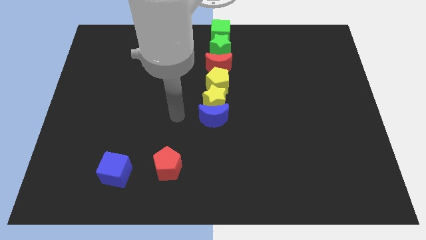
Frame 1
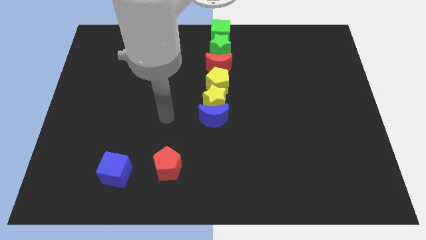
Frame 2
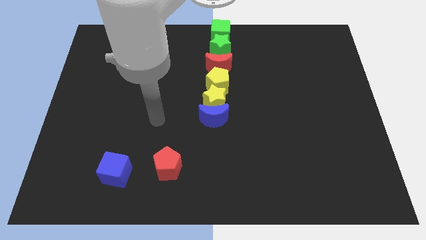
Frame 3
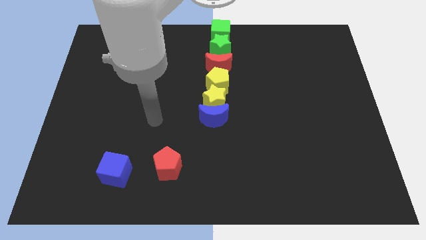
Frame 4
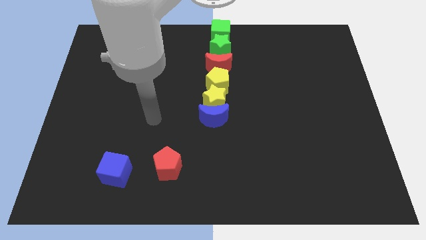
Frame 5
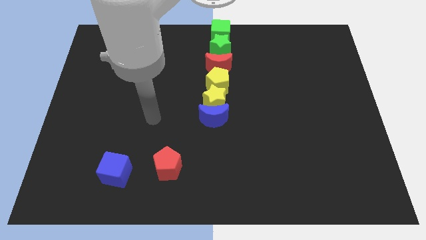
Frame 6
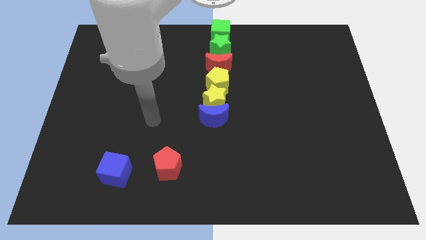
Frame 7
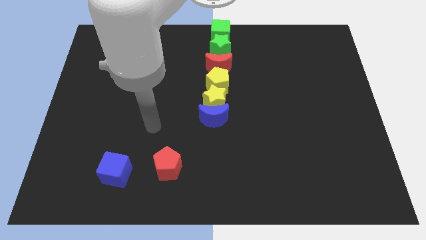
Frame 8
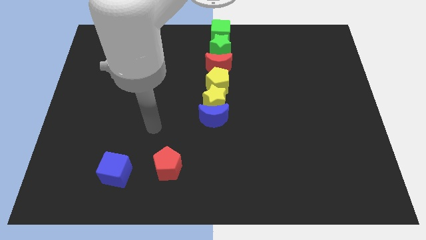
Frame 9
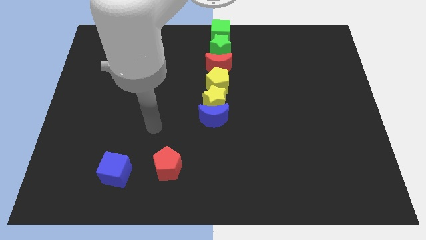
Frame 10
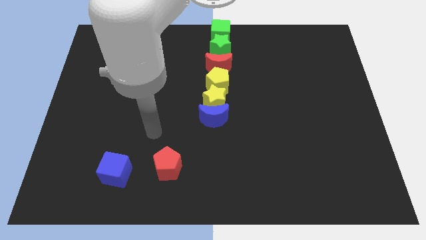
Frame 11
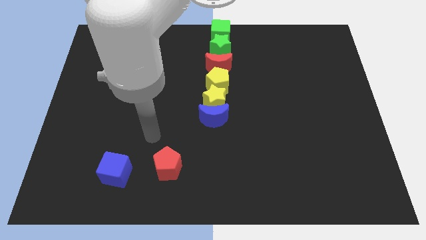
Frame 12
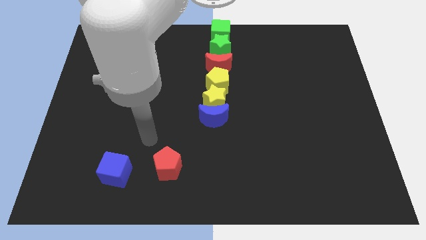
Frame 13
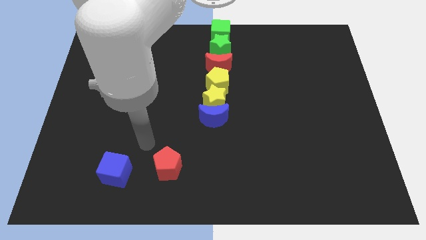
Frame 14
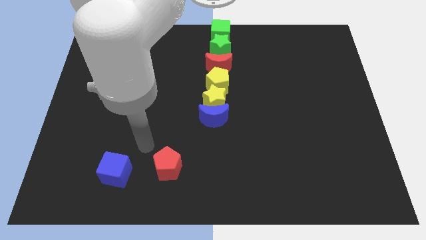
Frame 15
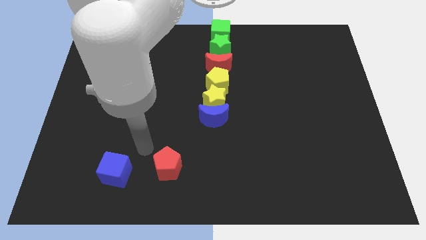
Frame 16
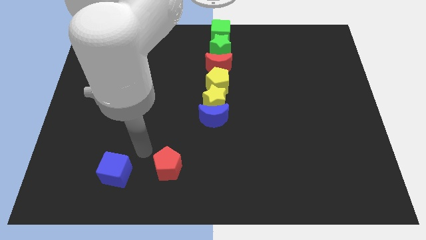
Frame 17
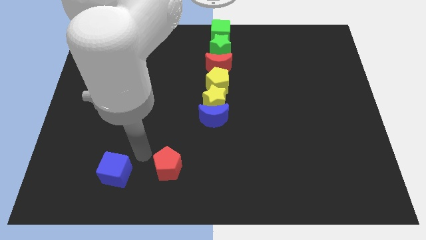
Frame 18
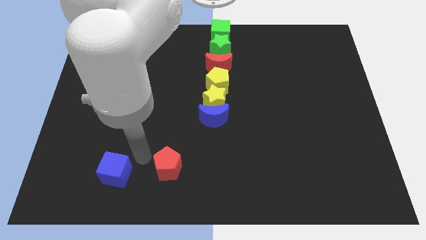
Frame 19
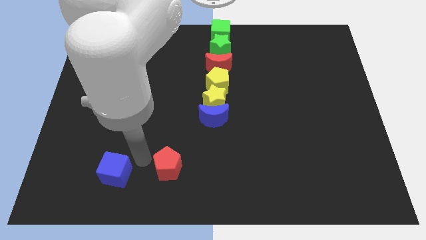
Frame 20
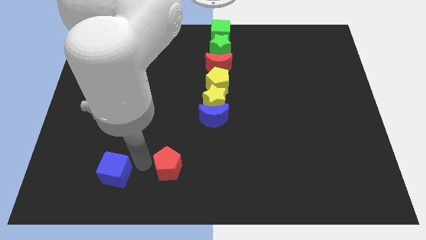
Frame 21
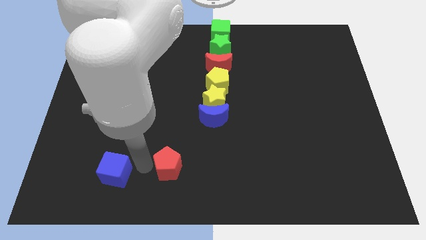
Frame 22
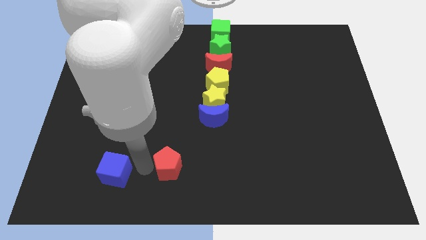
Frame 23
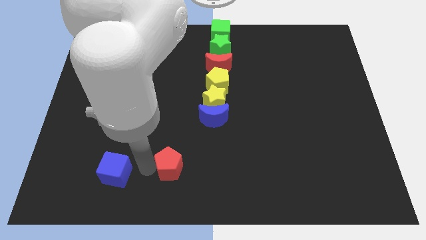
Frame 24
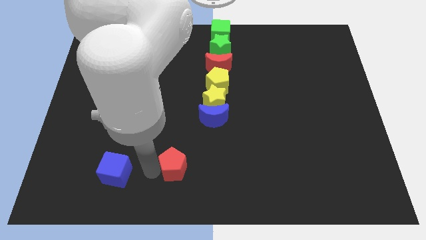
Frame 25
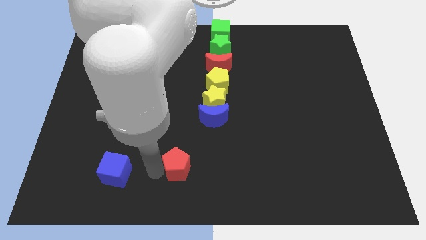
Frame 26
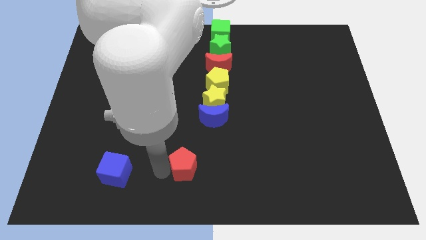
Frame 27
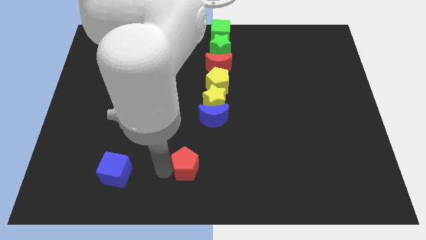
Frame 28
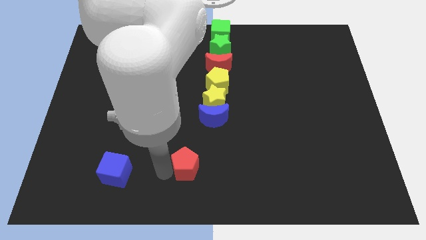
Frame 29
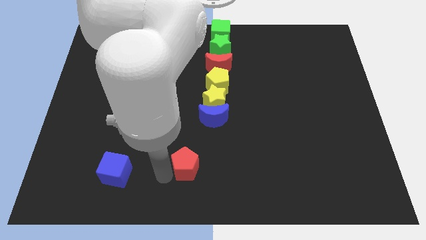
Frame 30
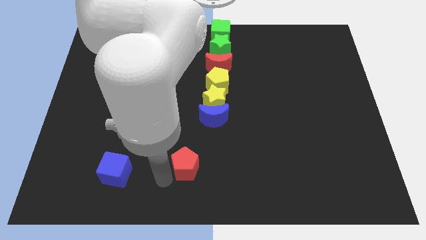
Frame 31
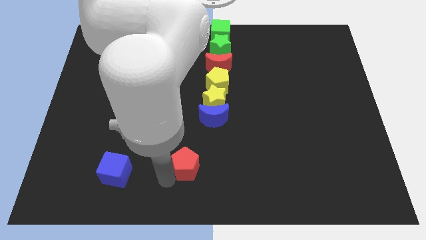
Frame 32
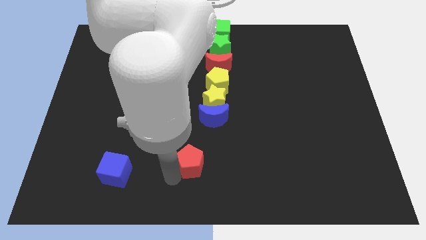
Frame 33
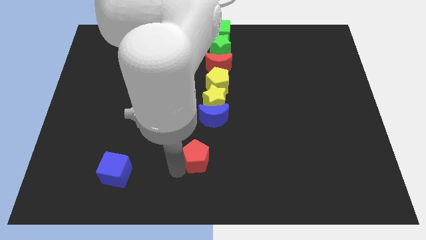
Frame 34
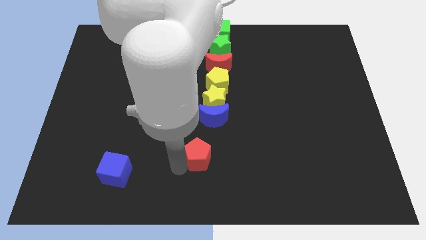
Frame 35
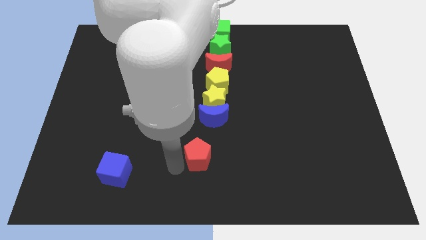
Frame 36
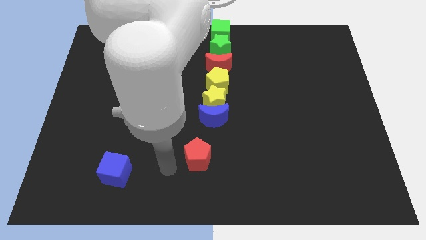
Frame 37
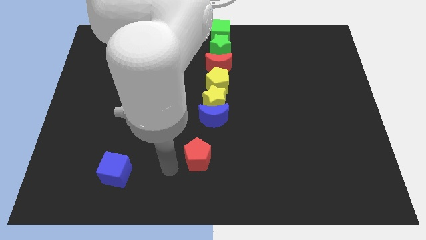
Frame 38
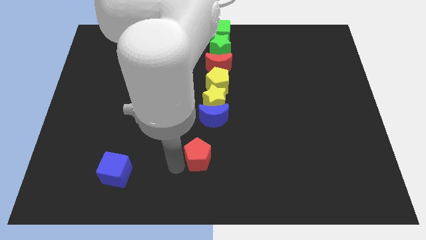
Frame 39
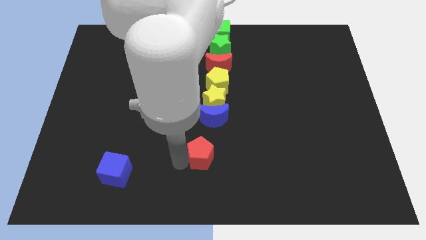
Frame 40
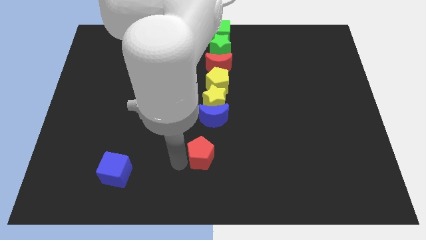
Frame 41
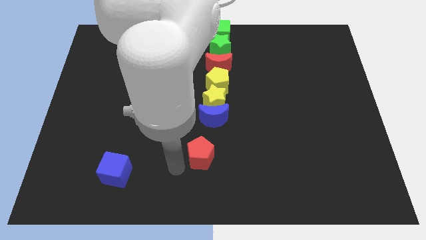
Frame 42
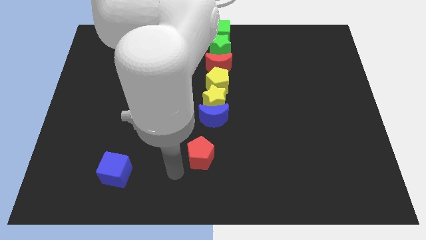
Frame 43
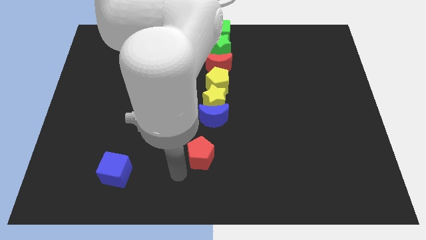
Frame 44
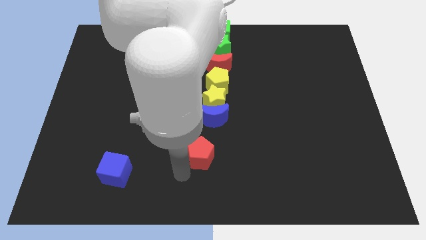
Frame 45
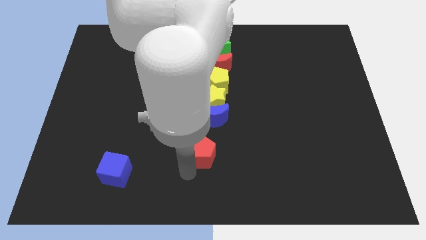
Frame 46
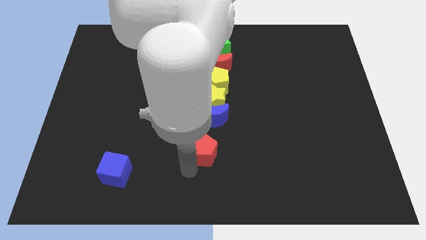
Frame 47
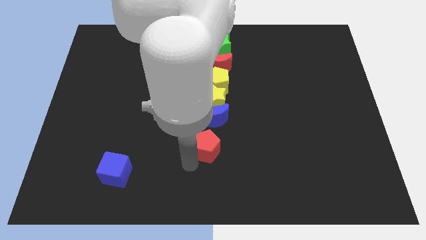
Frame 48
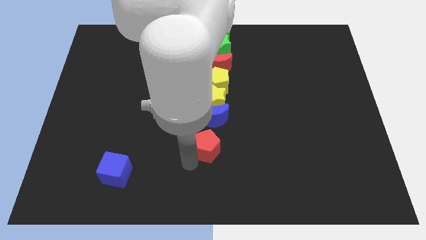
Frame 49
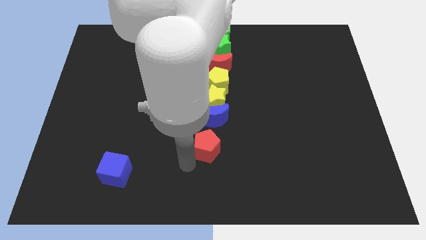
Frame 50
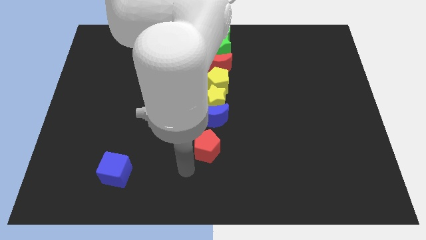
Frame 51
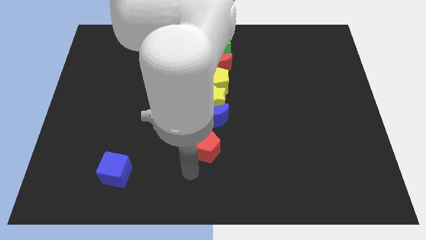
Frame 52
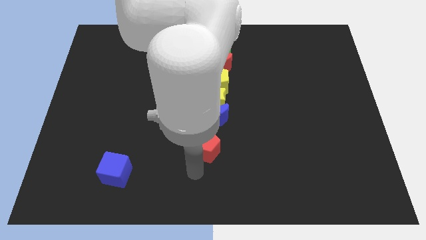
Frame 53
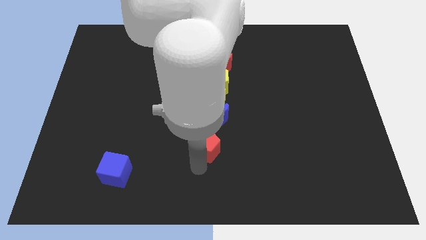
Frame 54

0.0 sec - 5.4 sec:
push the red pentagon vertically below the group of blocks

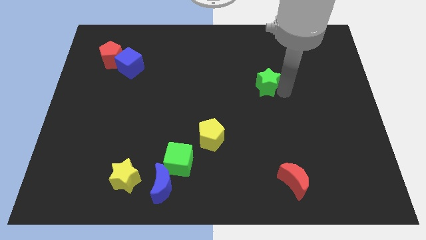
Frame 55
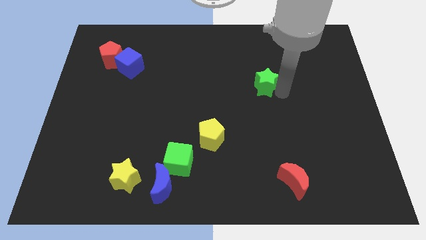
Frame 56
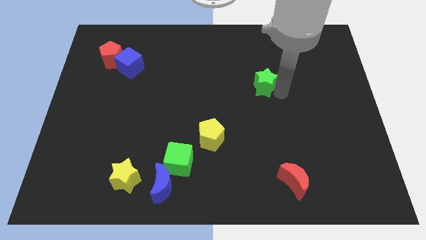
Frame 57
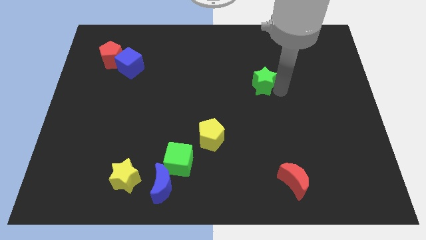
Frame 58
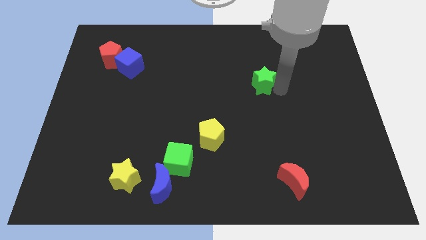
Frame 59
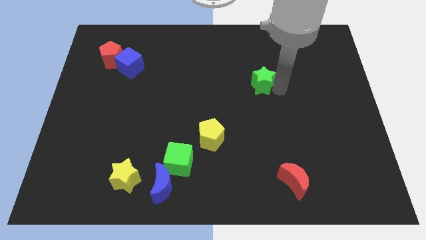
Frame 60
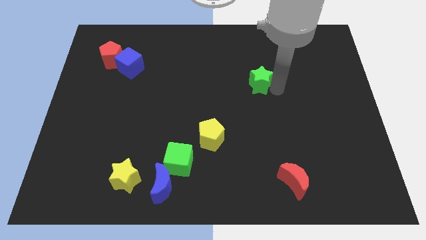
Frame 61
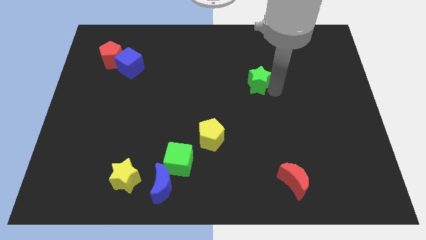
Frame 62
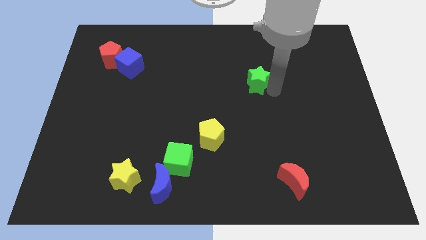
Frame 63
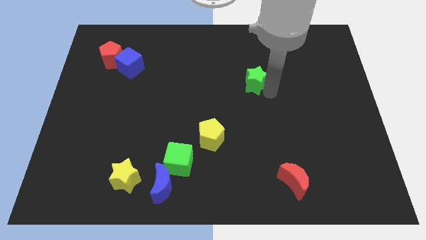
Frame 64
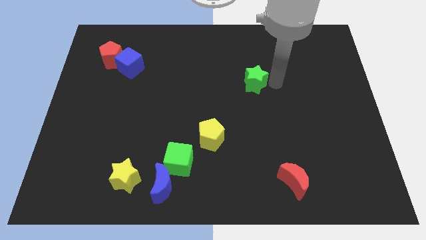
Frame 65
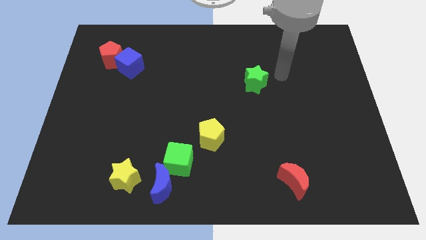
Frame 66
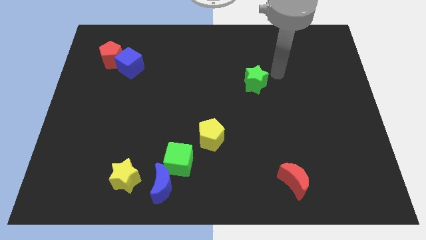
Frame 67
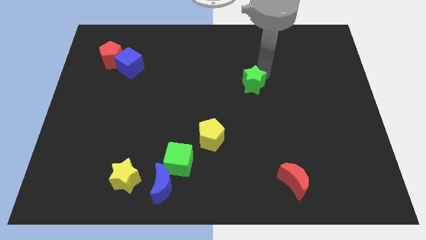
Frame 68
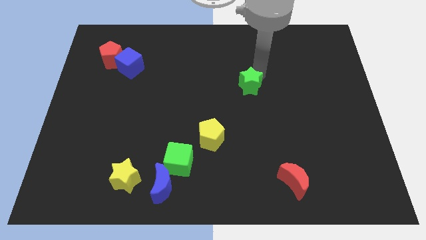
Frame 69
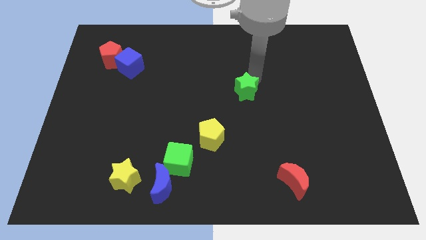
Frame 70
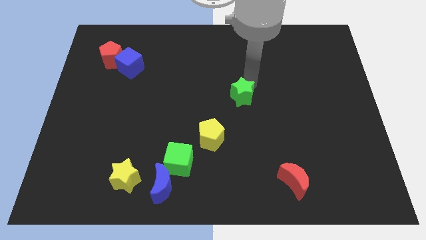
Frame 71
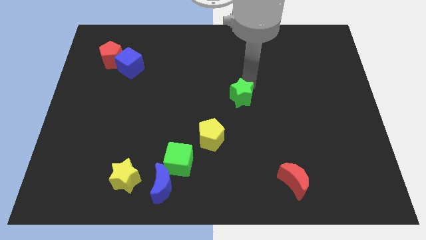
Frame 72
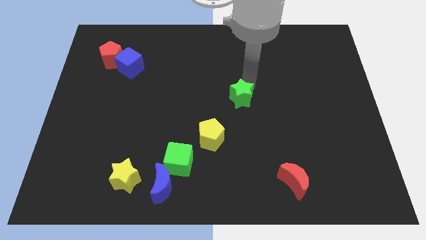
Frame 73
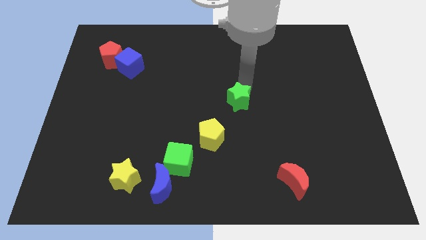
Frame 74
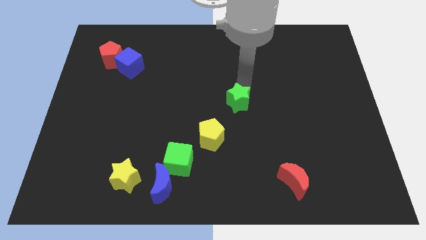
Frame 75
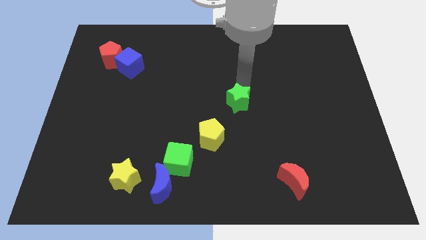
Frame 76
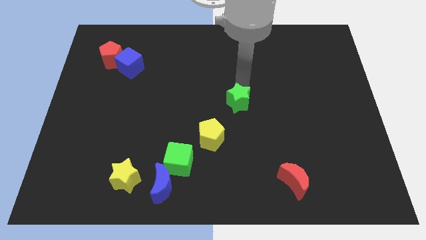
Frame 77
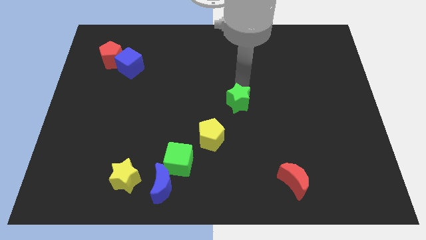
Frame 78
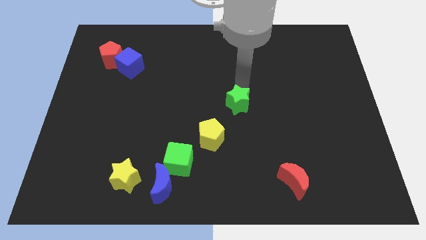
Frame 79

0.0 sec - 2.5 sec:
slide the green star towards the yellow pentagon

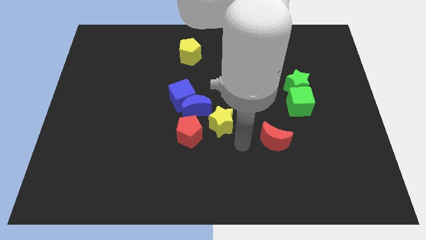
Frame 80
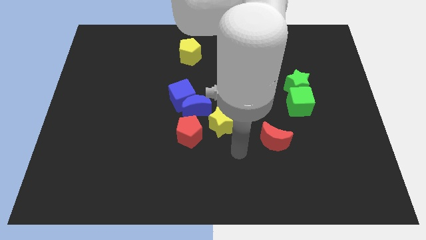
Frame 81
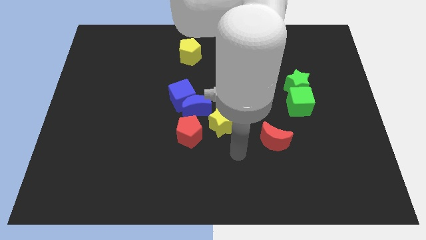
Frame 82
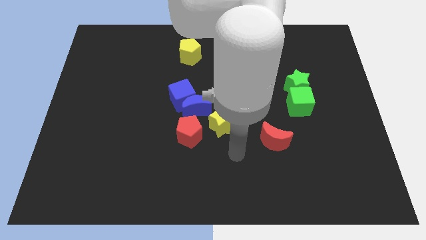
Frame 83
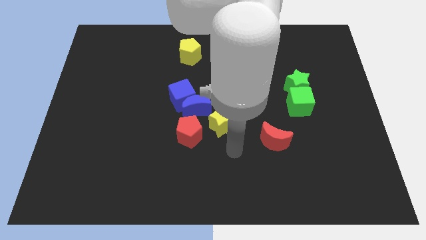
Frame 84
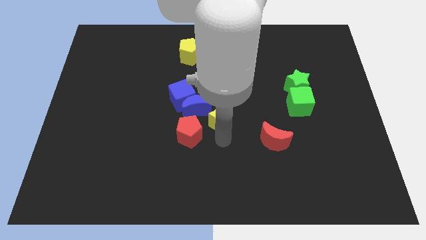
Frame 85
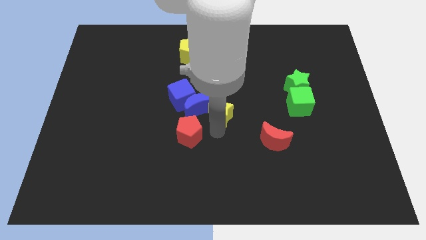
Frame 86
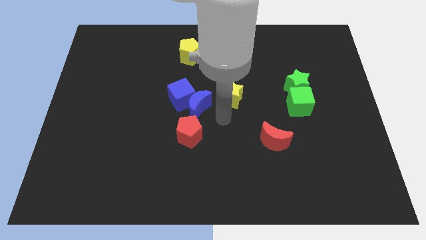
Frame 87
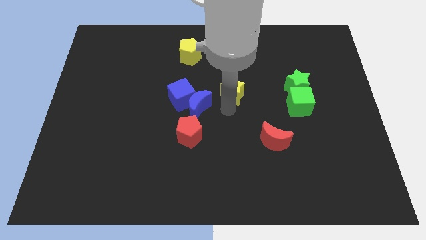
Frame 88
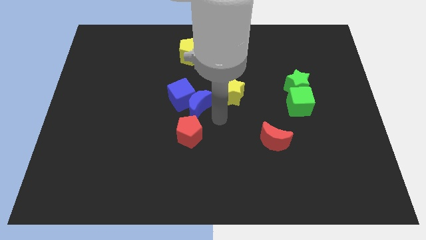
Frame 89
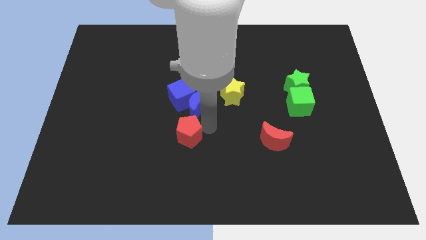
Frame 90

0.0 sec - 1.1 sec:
move the yellow star away from the blue crescent
